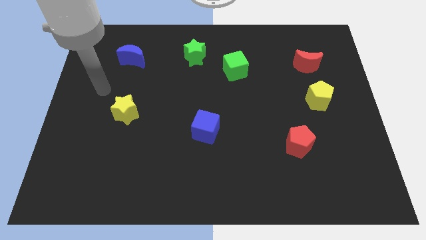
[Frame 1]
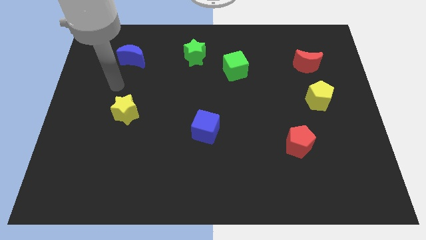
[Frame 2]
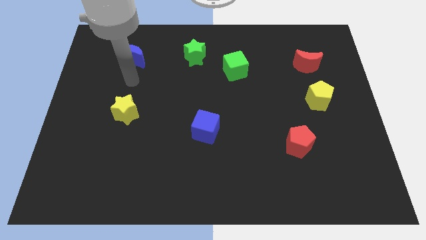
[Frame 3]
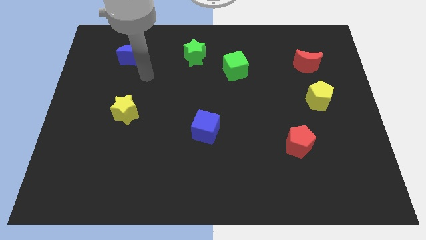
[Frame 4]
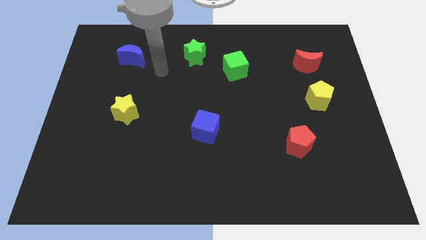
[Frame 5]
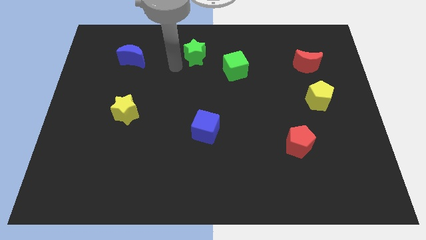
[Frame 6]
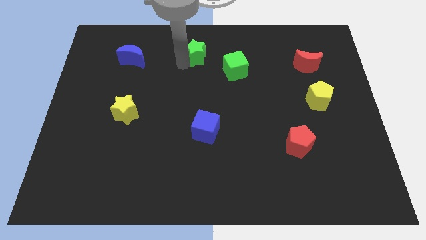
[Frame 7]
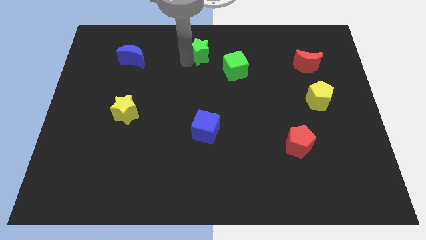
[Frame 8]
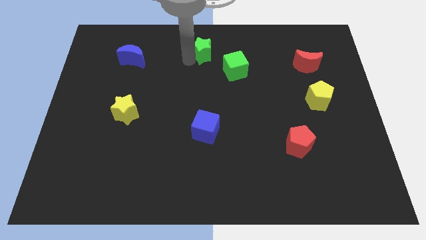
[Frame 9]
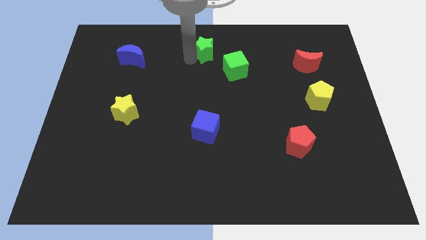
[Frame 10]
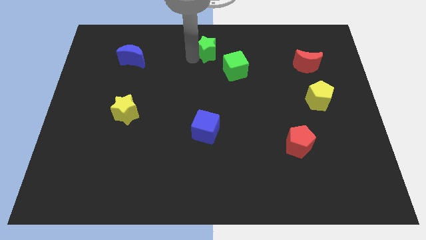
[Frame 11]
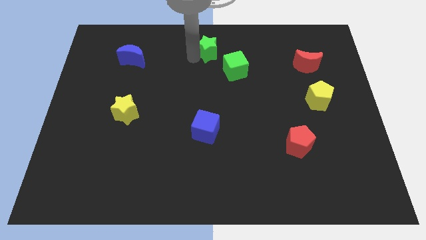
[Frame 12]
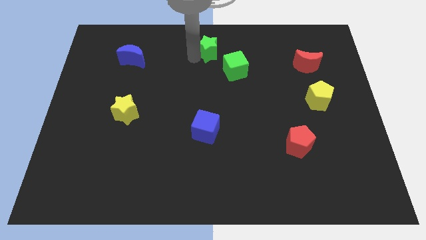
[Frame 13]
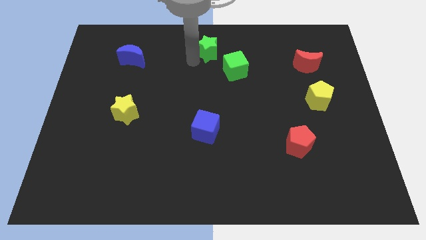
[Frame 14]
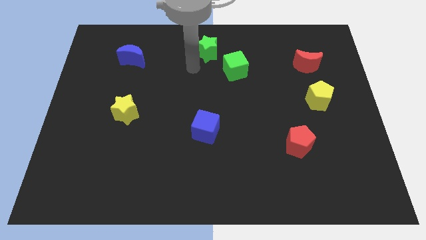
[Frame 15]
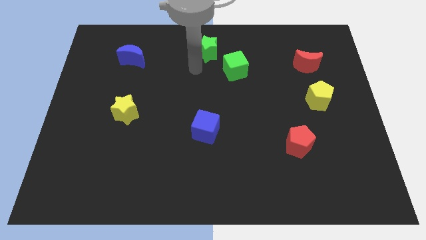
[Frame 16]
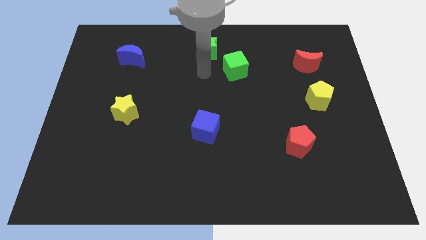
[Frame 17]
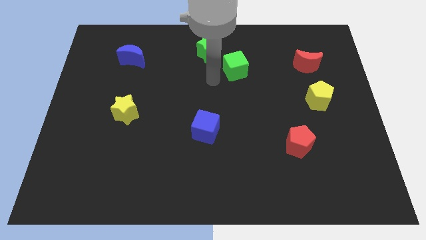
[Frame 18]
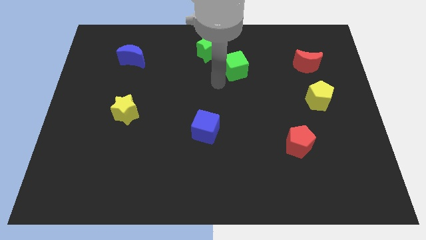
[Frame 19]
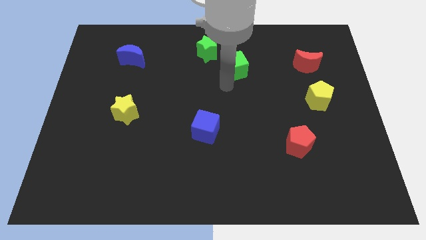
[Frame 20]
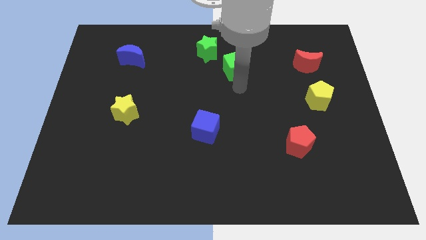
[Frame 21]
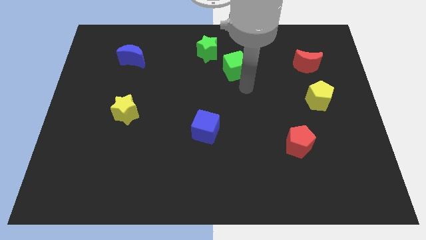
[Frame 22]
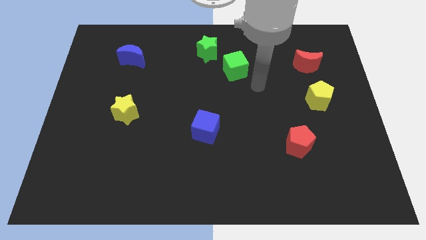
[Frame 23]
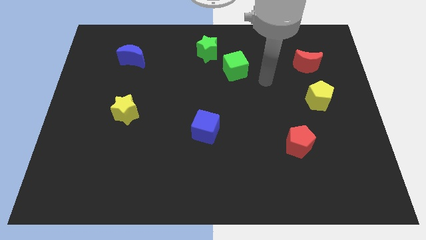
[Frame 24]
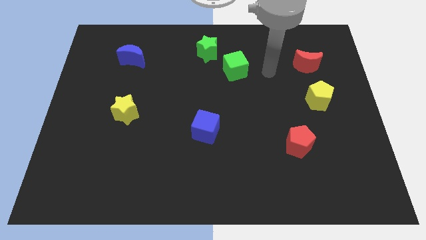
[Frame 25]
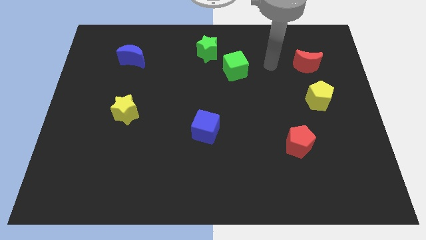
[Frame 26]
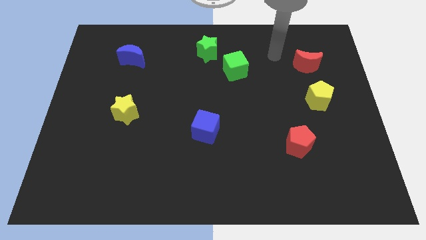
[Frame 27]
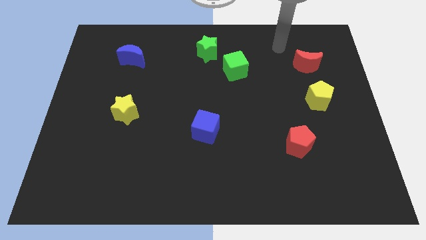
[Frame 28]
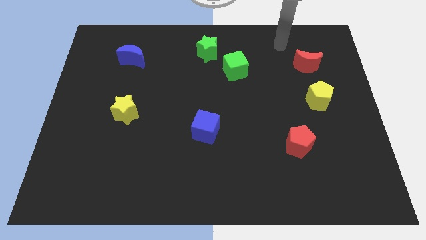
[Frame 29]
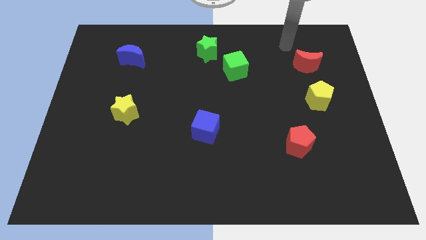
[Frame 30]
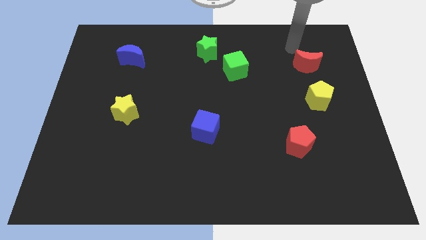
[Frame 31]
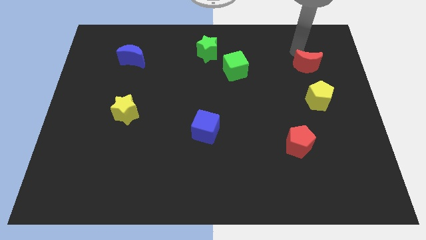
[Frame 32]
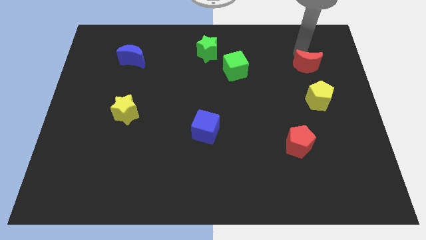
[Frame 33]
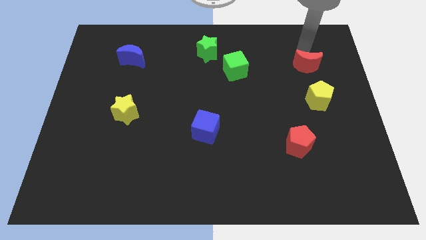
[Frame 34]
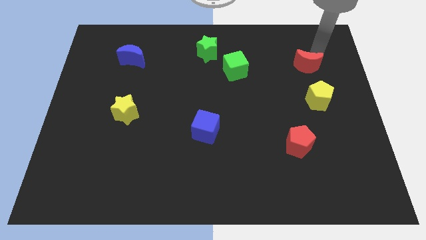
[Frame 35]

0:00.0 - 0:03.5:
move green star slightl to the right side

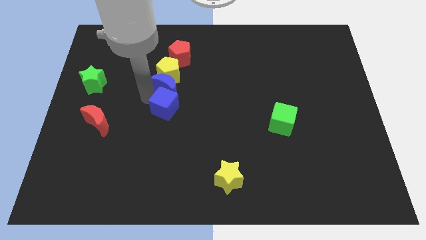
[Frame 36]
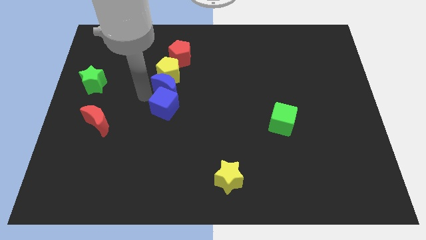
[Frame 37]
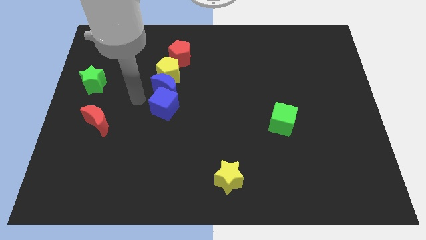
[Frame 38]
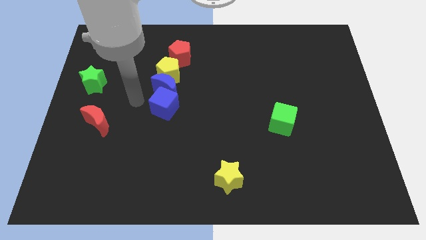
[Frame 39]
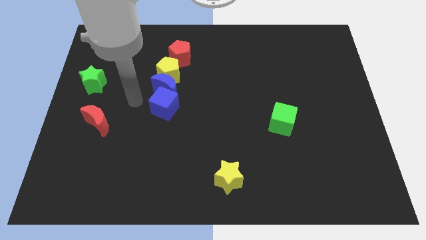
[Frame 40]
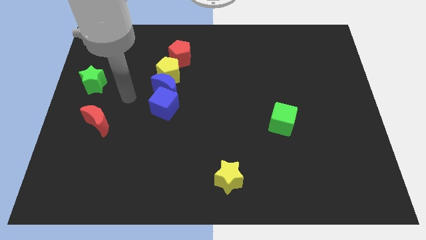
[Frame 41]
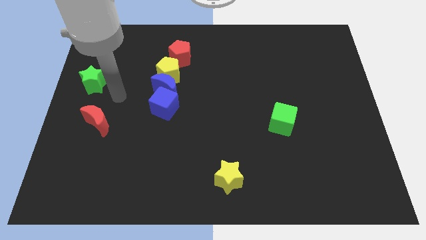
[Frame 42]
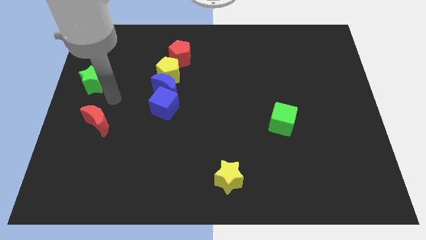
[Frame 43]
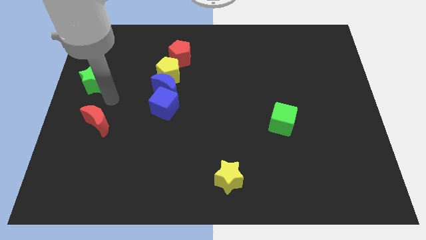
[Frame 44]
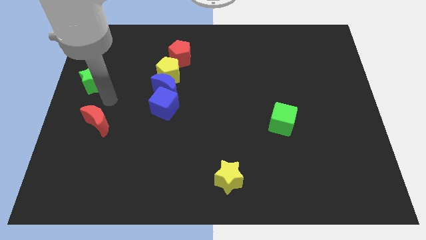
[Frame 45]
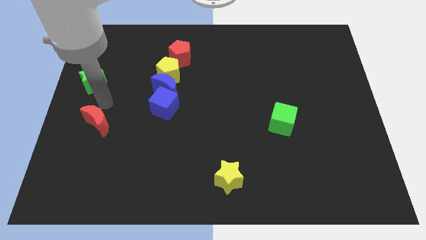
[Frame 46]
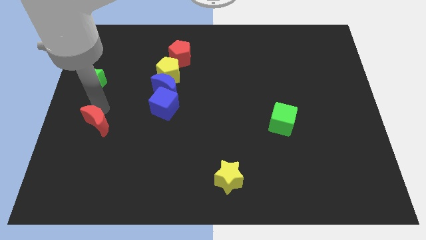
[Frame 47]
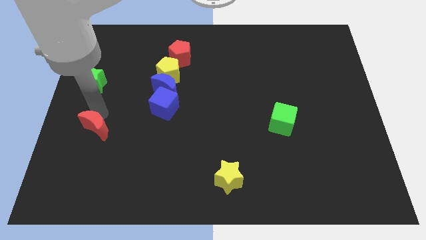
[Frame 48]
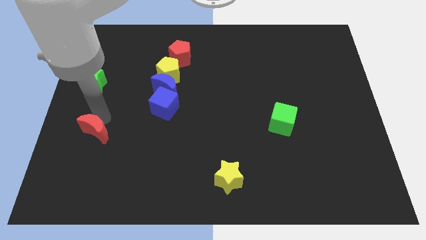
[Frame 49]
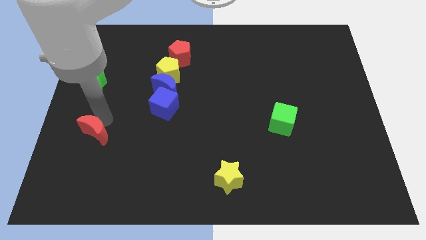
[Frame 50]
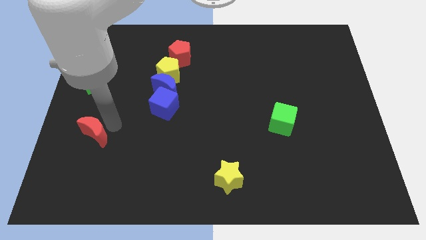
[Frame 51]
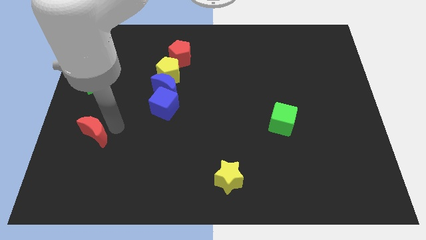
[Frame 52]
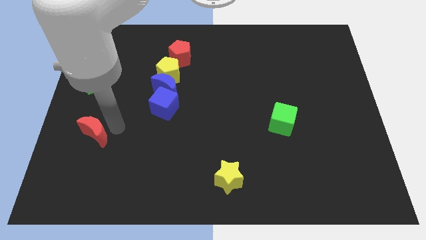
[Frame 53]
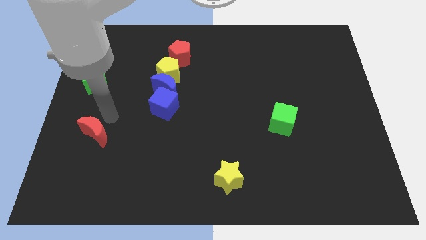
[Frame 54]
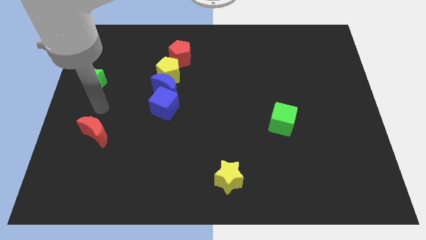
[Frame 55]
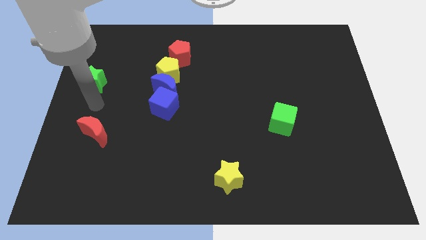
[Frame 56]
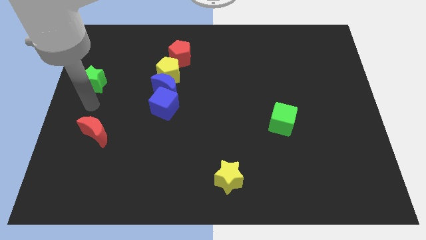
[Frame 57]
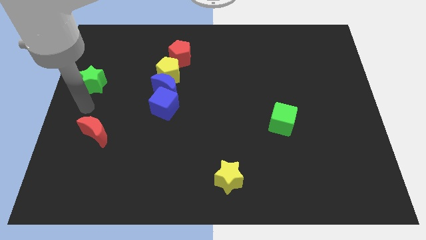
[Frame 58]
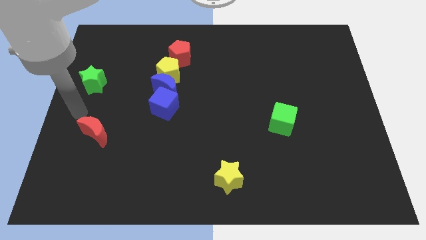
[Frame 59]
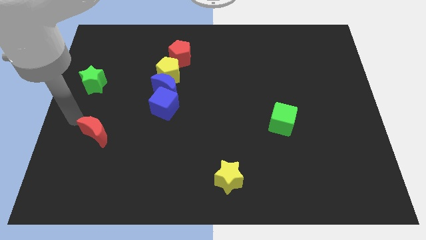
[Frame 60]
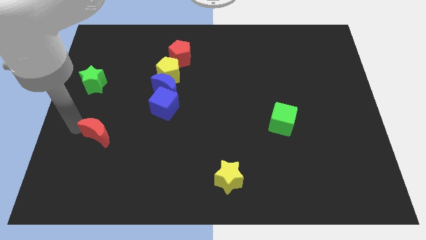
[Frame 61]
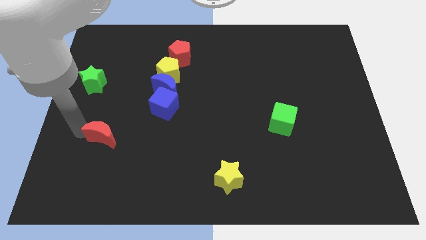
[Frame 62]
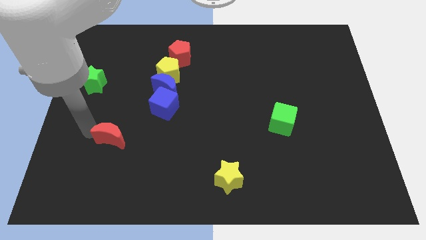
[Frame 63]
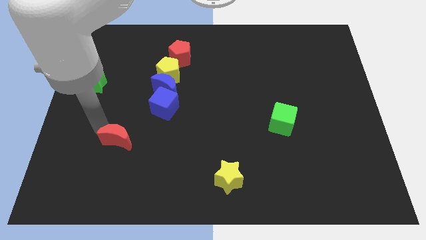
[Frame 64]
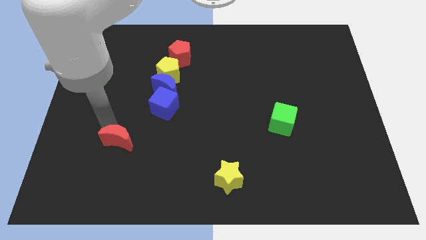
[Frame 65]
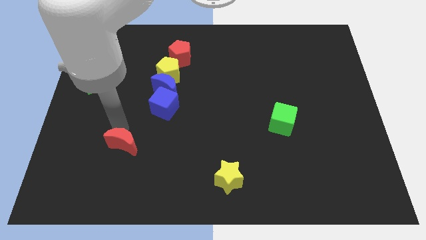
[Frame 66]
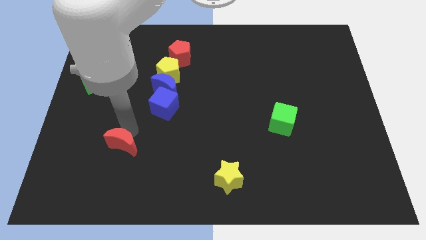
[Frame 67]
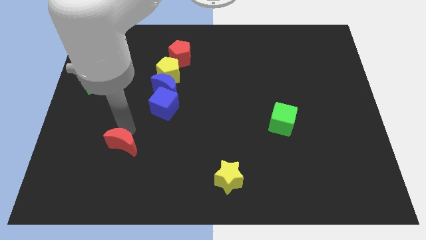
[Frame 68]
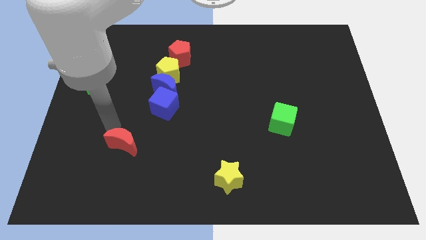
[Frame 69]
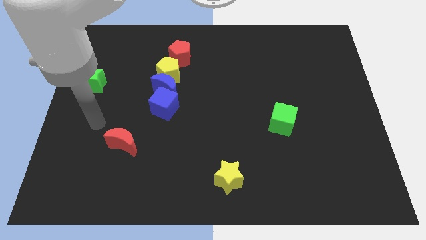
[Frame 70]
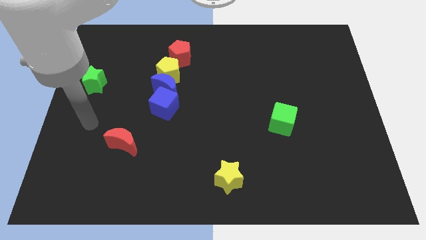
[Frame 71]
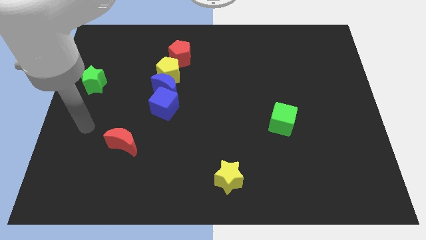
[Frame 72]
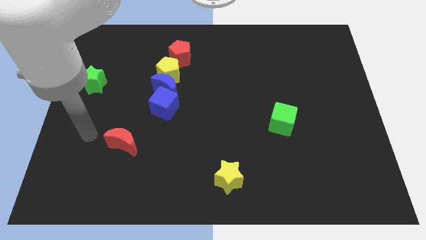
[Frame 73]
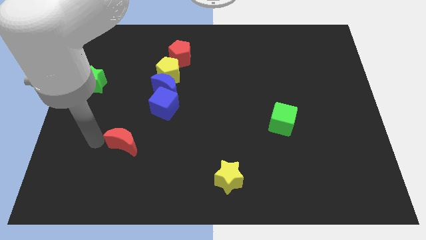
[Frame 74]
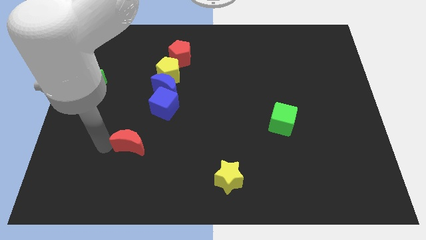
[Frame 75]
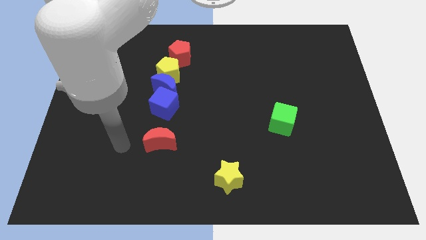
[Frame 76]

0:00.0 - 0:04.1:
move the red crescent to the bottom side of the blue cube

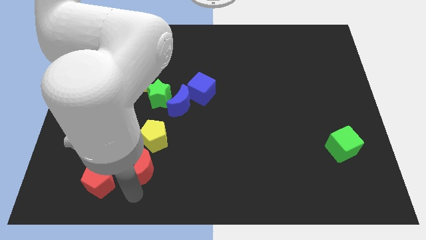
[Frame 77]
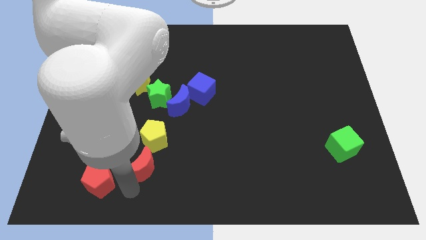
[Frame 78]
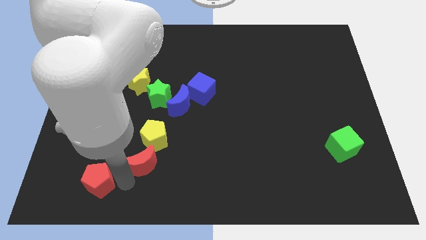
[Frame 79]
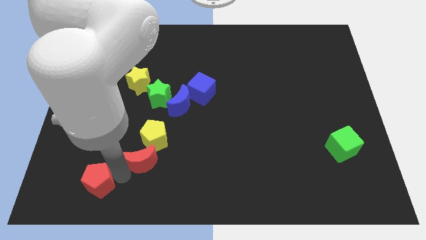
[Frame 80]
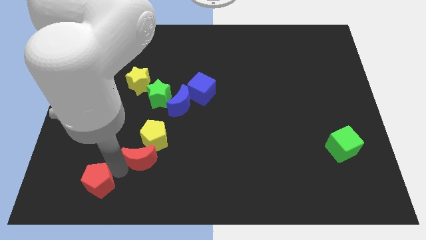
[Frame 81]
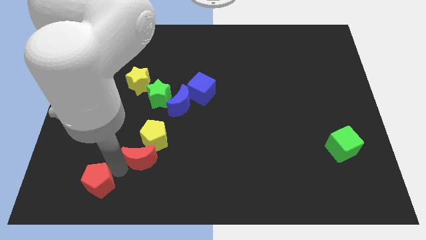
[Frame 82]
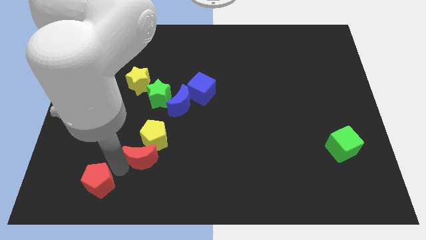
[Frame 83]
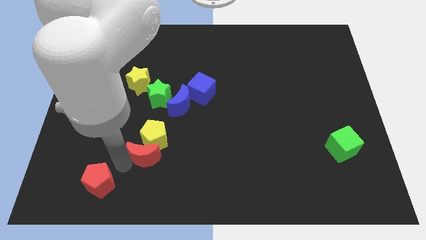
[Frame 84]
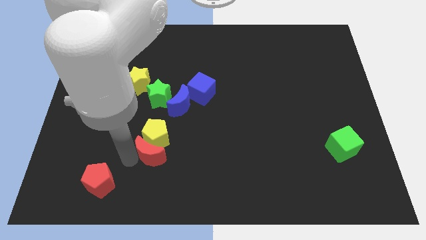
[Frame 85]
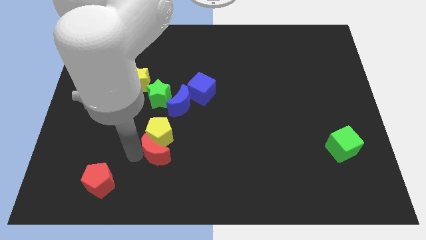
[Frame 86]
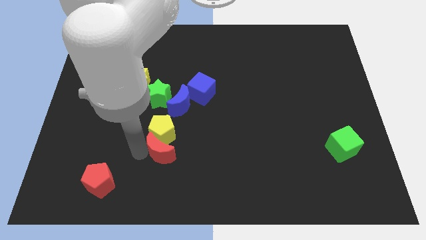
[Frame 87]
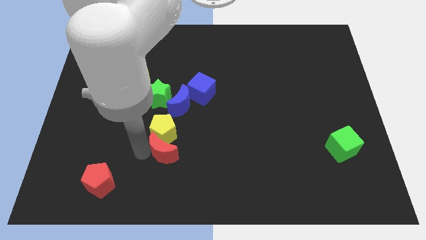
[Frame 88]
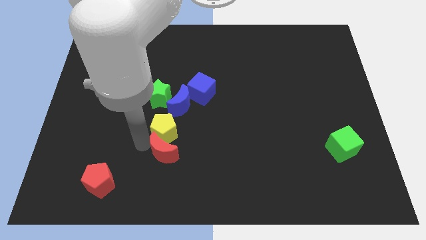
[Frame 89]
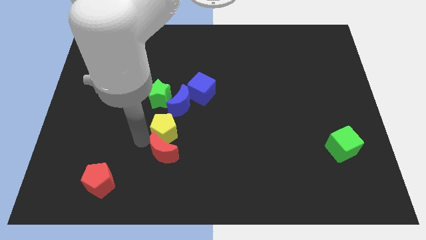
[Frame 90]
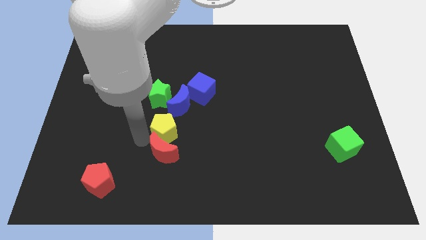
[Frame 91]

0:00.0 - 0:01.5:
push red moon slightly to the right
